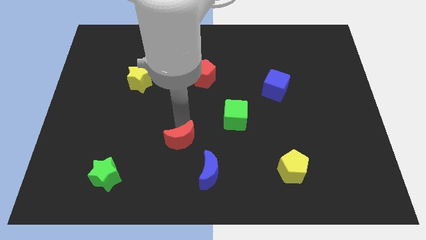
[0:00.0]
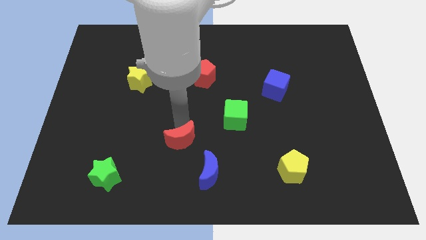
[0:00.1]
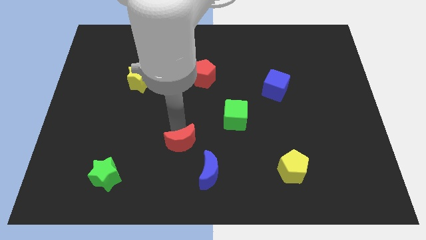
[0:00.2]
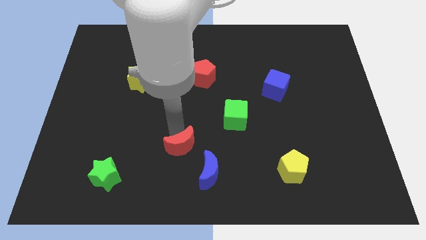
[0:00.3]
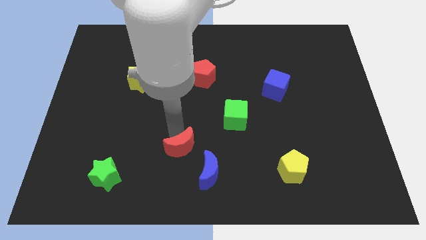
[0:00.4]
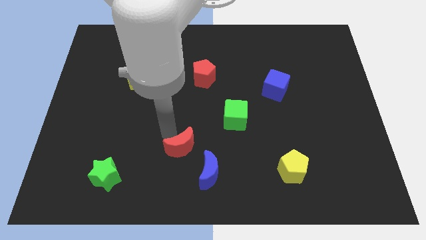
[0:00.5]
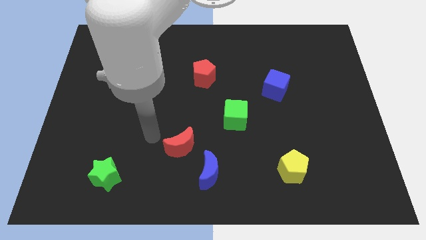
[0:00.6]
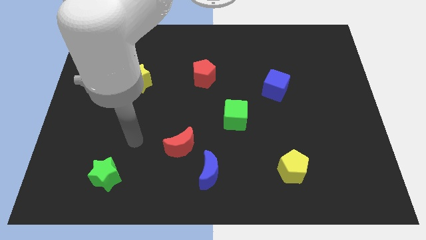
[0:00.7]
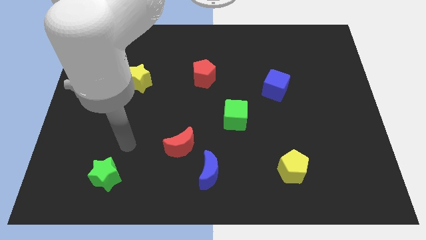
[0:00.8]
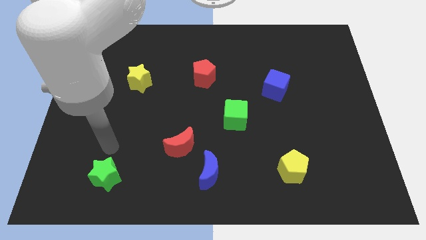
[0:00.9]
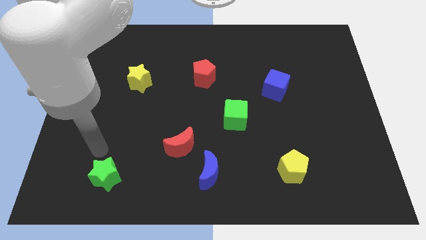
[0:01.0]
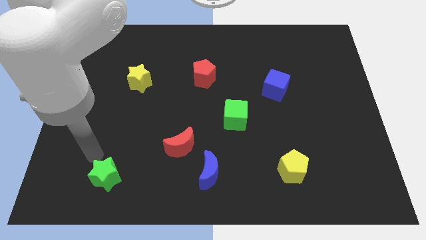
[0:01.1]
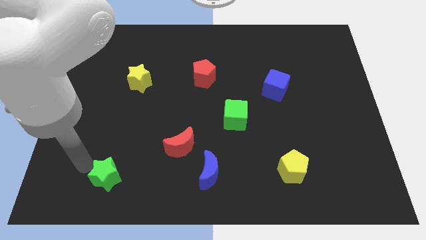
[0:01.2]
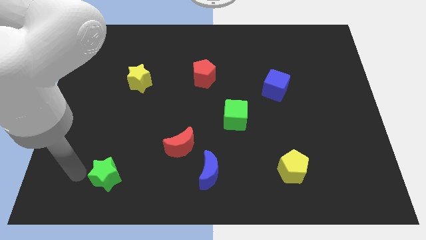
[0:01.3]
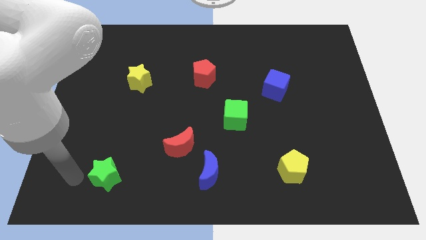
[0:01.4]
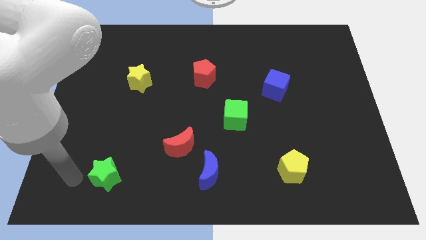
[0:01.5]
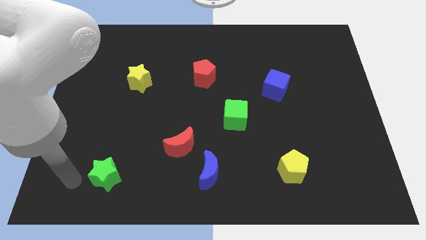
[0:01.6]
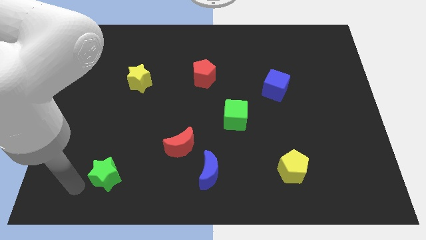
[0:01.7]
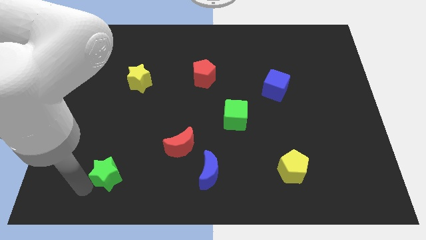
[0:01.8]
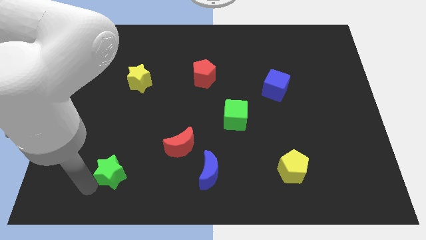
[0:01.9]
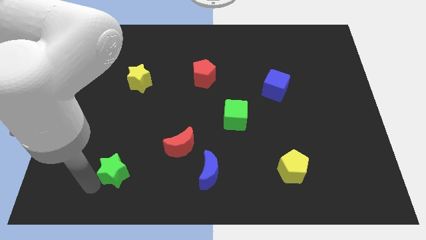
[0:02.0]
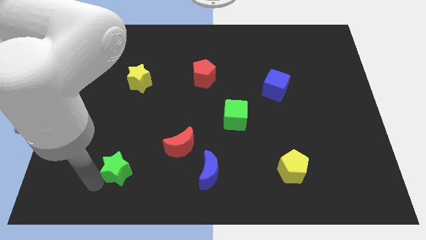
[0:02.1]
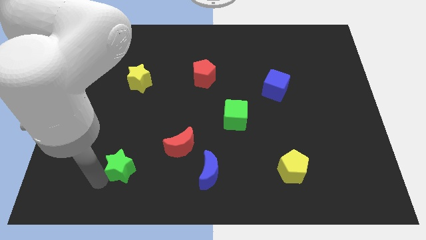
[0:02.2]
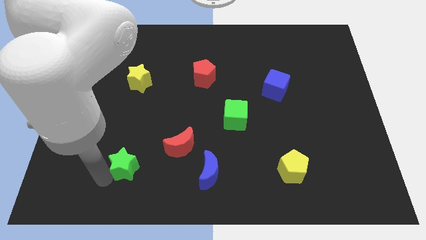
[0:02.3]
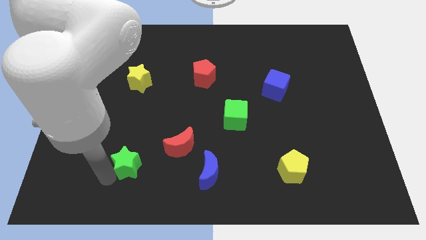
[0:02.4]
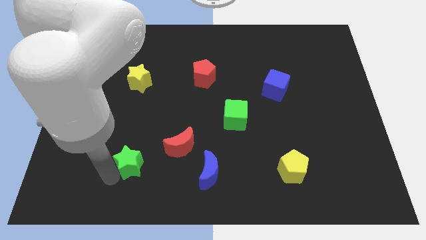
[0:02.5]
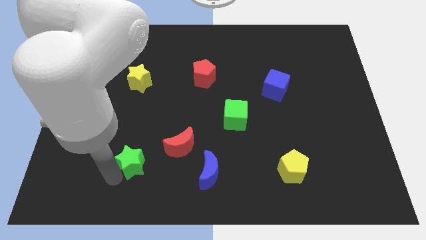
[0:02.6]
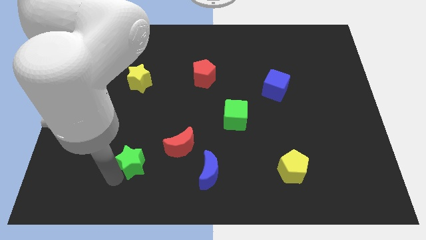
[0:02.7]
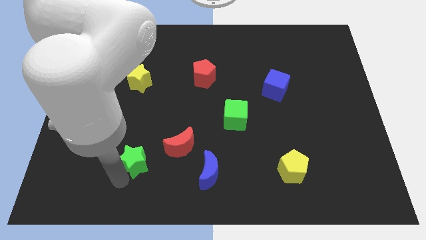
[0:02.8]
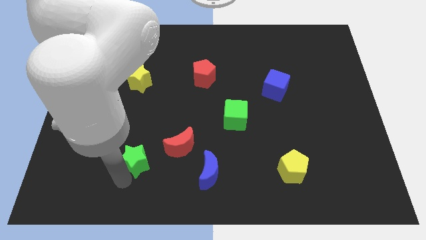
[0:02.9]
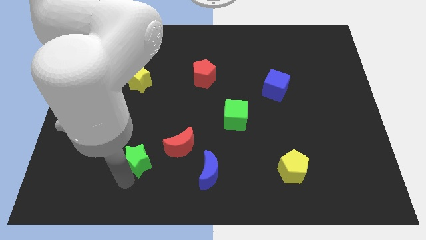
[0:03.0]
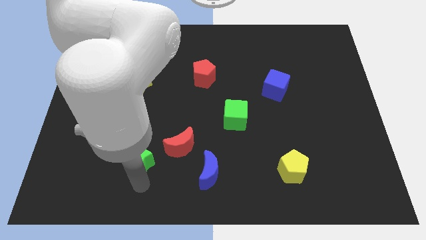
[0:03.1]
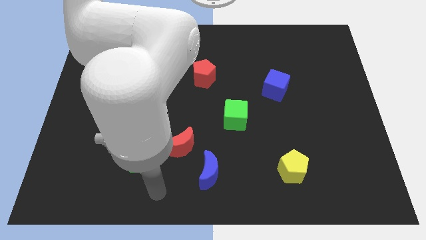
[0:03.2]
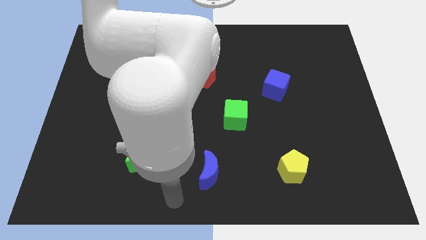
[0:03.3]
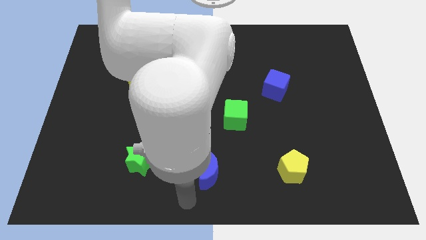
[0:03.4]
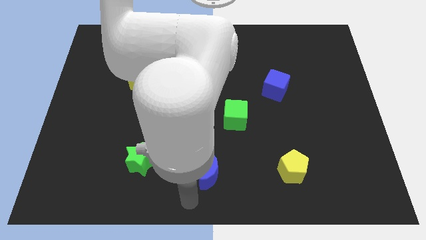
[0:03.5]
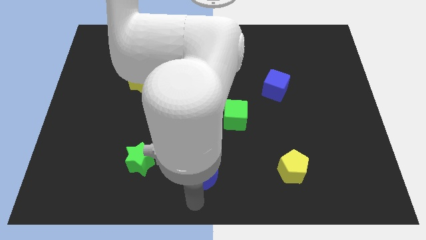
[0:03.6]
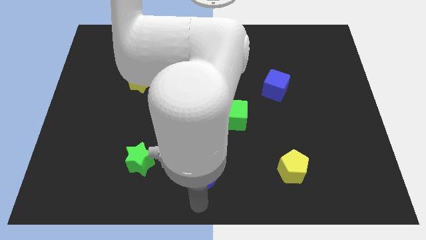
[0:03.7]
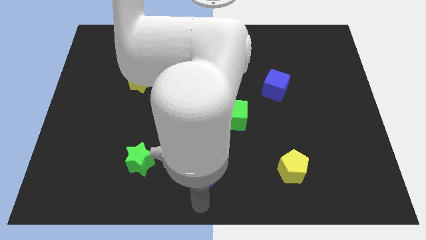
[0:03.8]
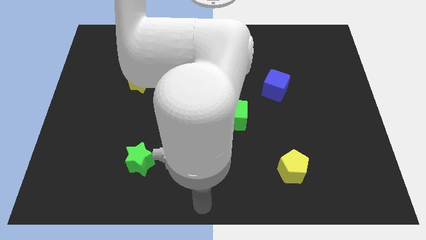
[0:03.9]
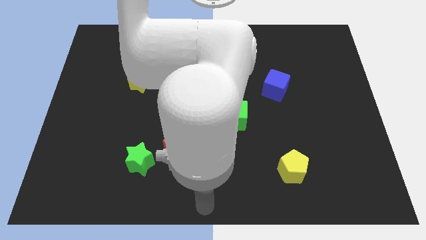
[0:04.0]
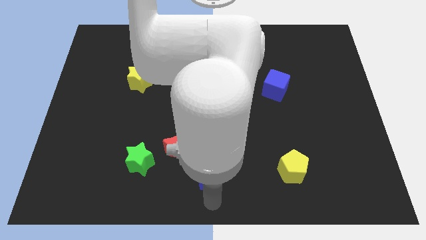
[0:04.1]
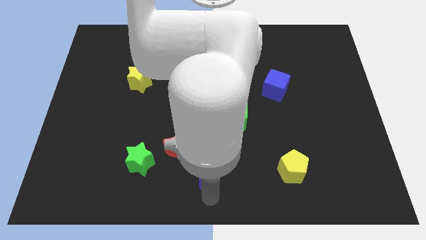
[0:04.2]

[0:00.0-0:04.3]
place the green star below the red moon

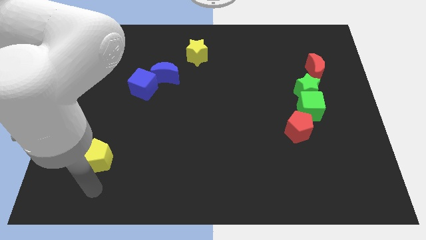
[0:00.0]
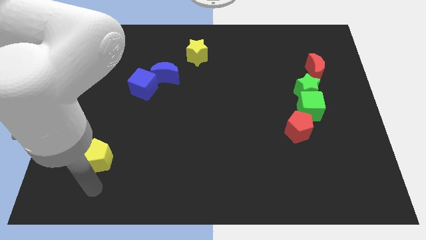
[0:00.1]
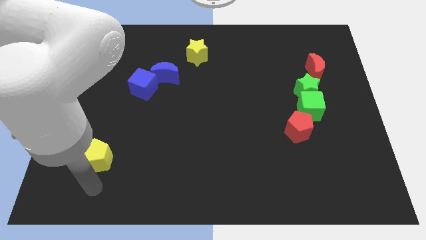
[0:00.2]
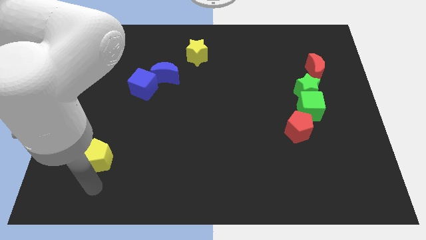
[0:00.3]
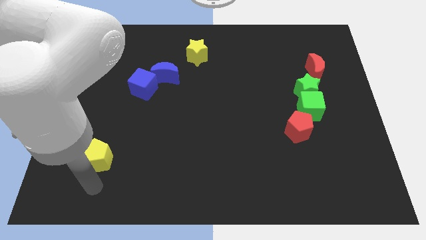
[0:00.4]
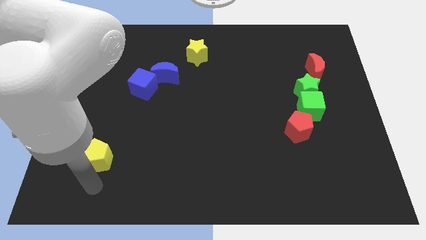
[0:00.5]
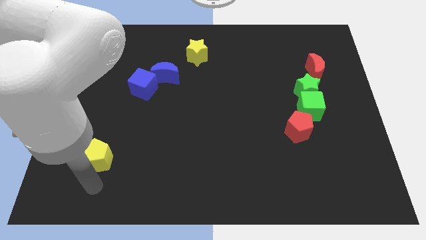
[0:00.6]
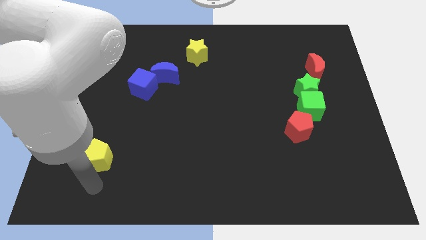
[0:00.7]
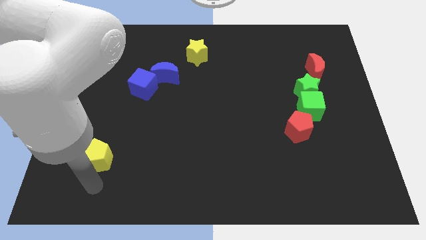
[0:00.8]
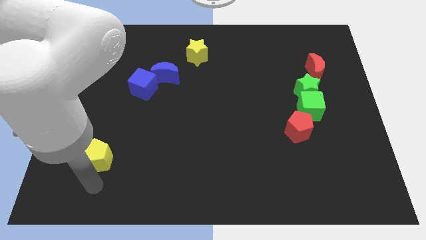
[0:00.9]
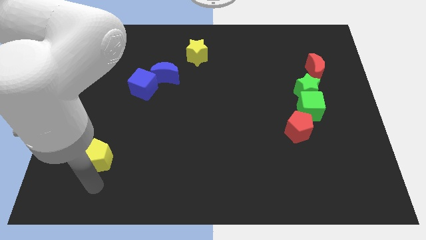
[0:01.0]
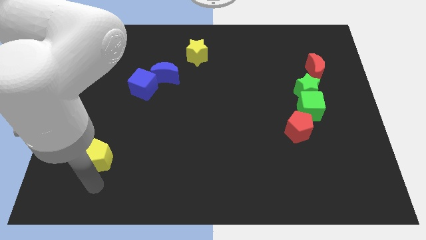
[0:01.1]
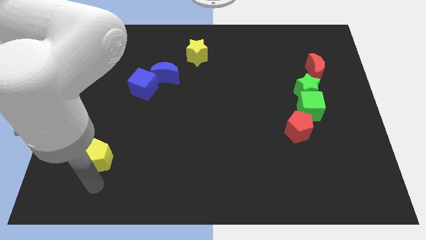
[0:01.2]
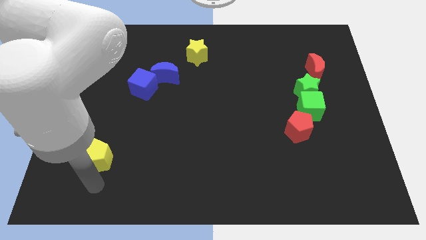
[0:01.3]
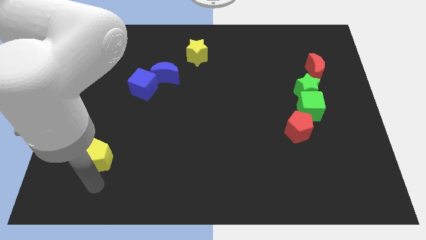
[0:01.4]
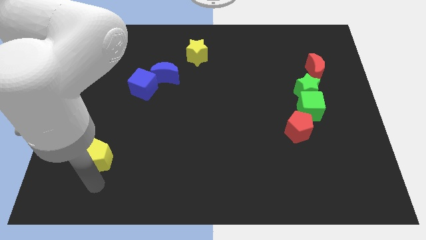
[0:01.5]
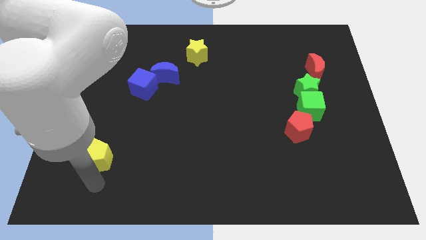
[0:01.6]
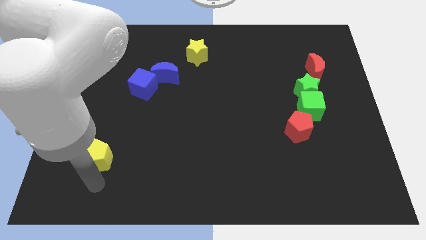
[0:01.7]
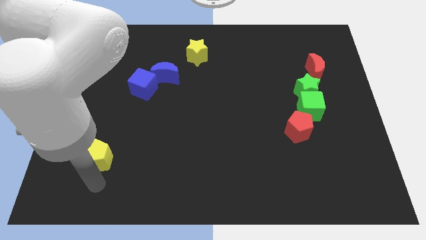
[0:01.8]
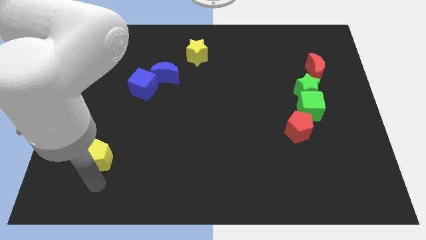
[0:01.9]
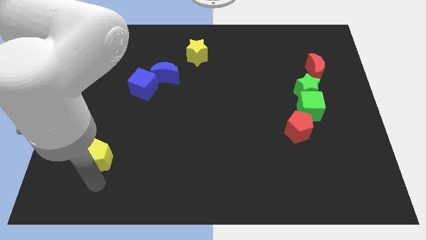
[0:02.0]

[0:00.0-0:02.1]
point your arm below yellow pentagon

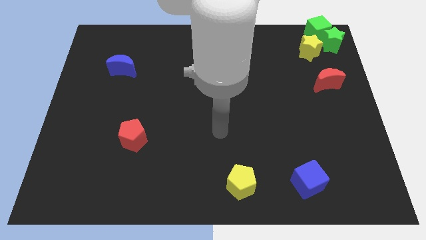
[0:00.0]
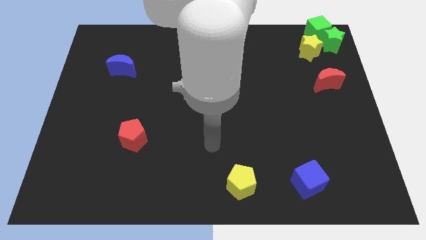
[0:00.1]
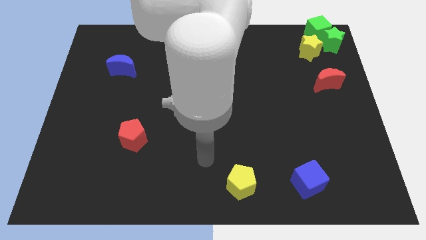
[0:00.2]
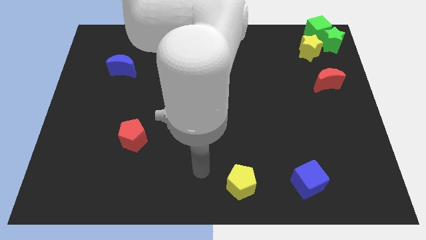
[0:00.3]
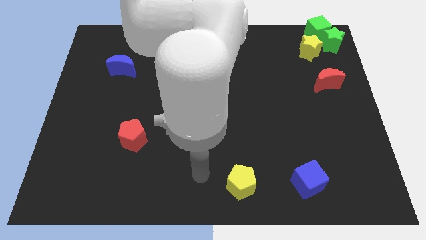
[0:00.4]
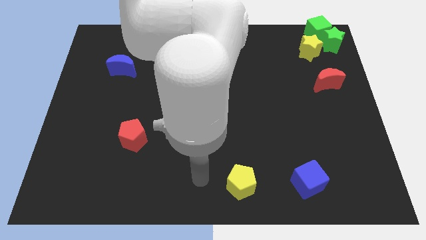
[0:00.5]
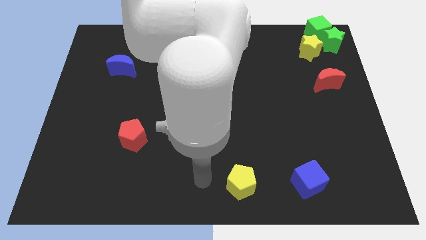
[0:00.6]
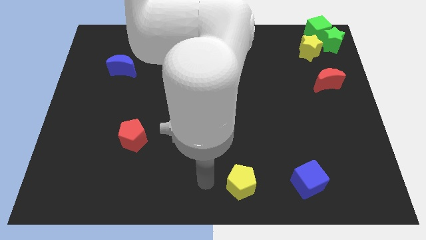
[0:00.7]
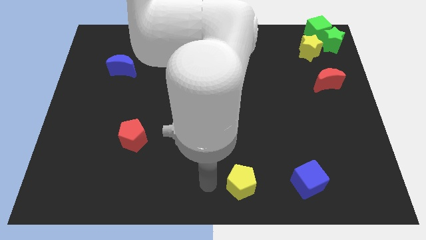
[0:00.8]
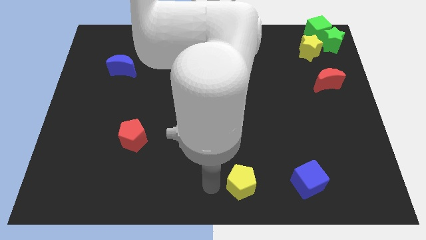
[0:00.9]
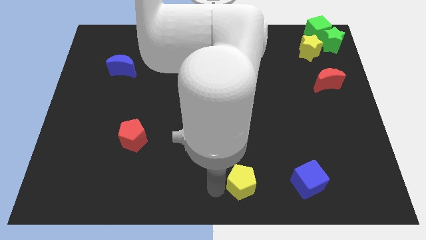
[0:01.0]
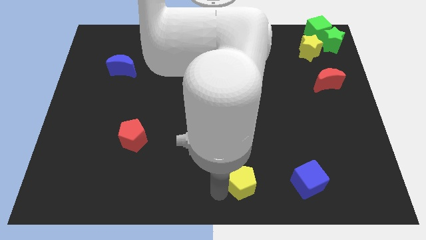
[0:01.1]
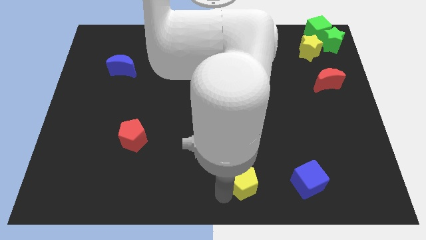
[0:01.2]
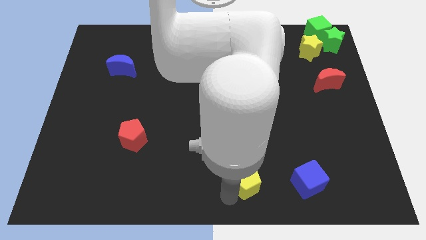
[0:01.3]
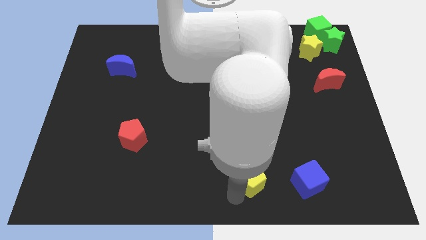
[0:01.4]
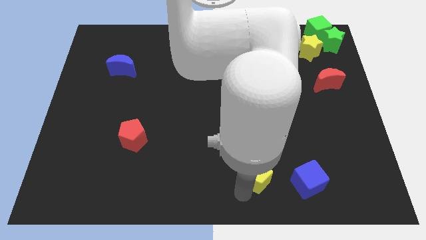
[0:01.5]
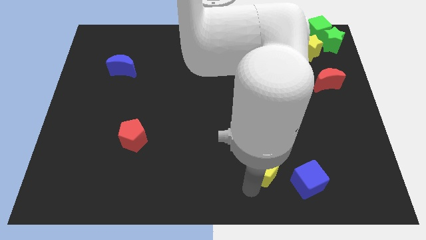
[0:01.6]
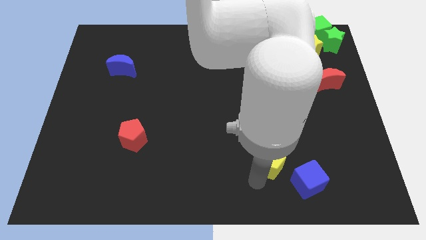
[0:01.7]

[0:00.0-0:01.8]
move the arm towards the yellow pentagon

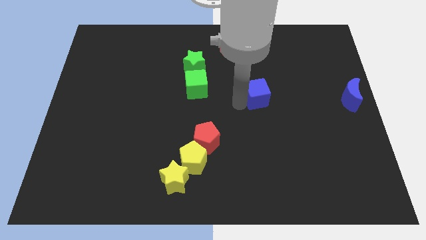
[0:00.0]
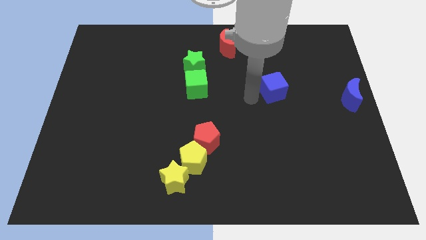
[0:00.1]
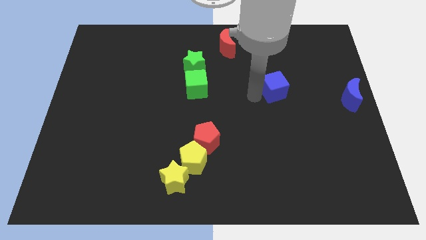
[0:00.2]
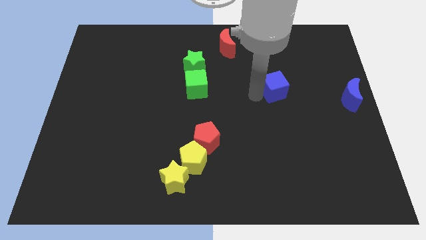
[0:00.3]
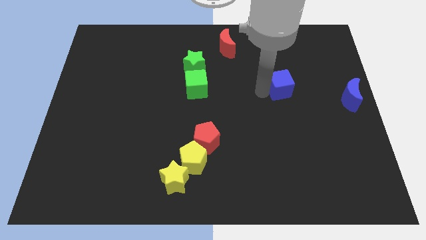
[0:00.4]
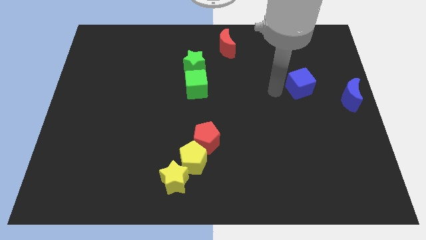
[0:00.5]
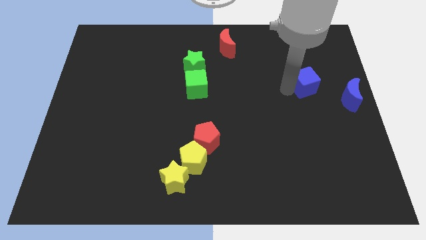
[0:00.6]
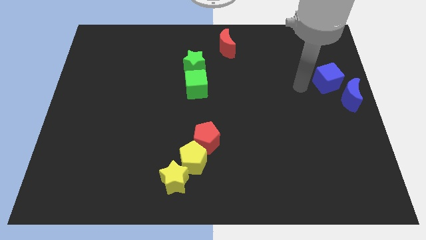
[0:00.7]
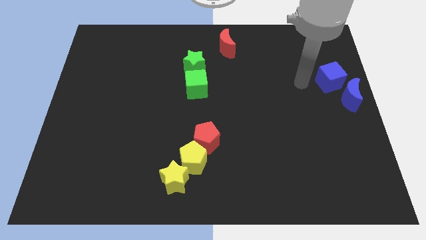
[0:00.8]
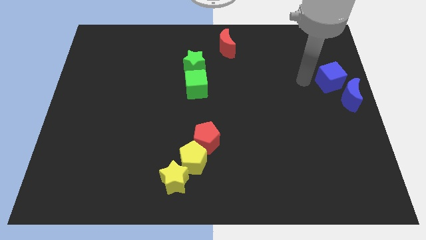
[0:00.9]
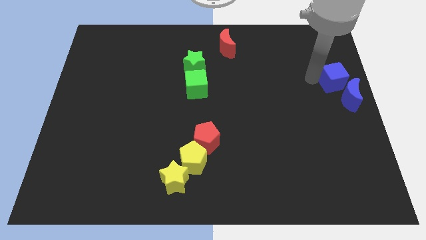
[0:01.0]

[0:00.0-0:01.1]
add blue cube into blue moon
